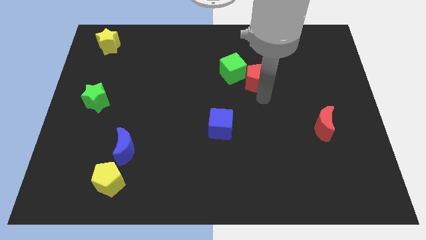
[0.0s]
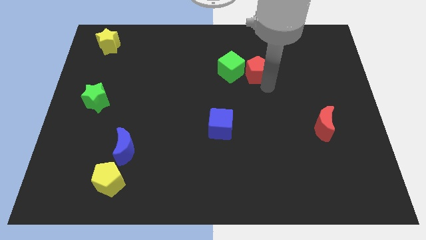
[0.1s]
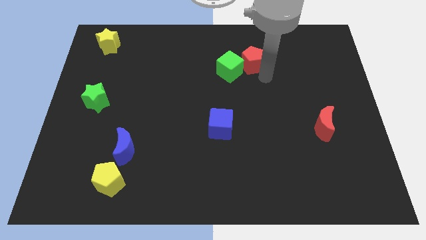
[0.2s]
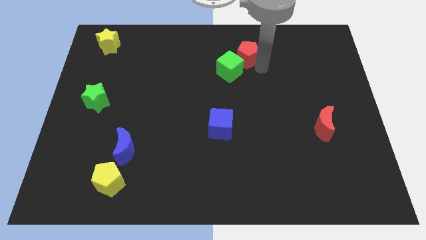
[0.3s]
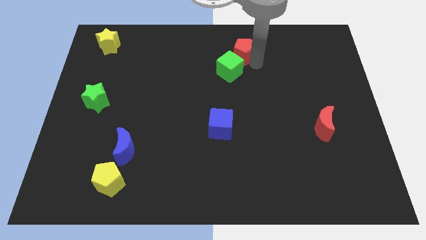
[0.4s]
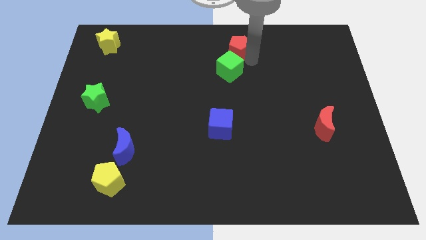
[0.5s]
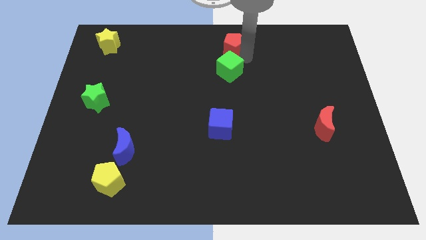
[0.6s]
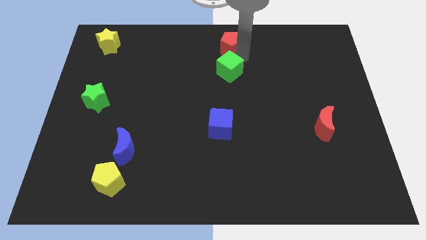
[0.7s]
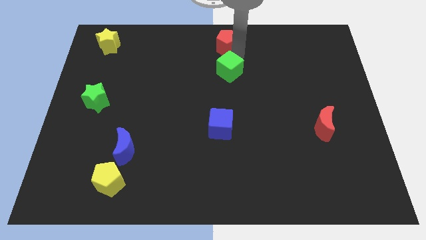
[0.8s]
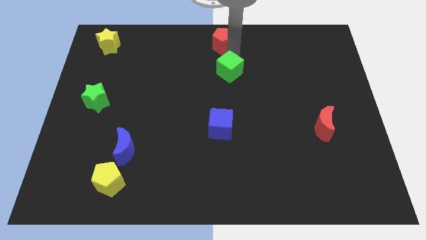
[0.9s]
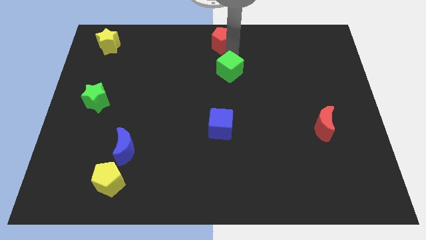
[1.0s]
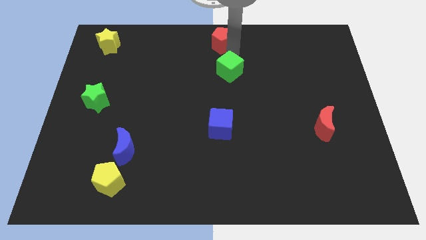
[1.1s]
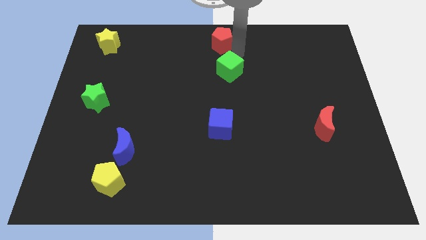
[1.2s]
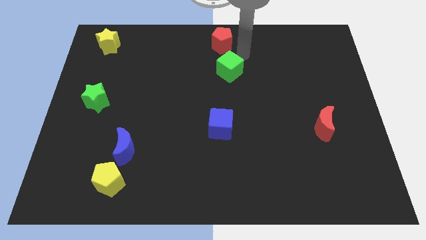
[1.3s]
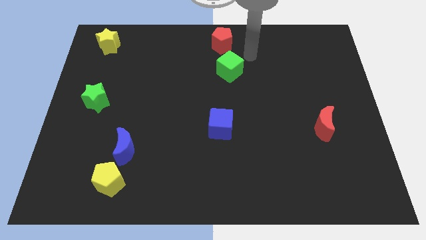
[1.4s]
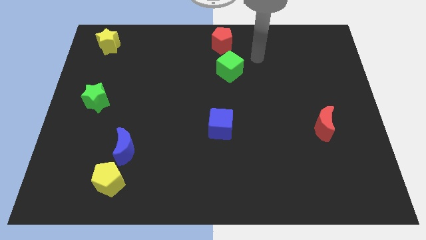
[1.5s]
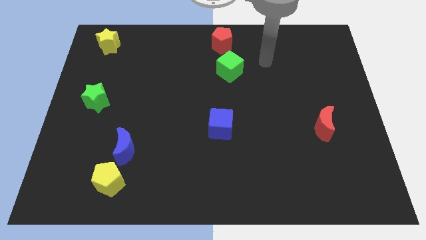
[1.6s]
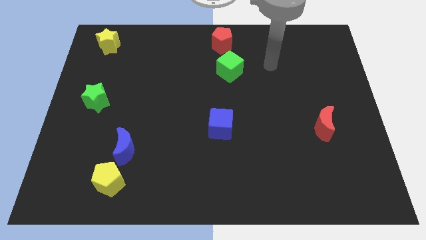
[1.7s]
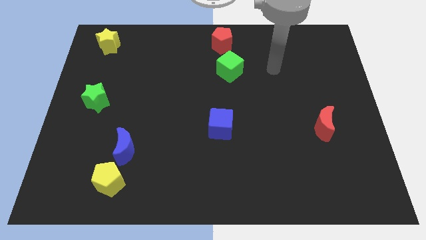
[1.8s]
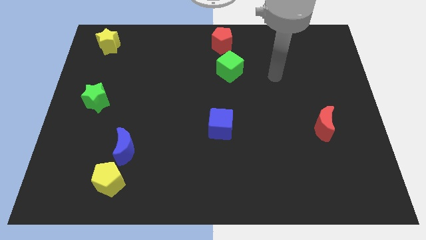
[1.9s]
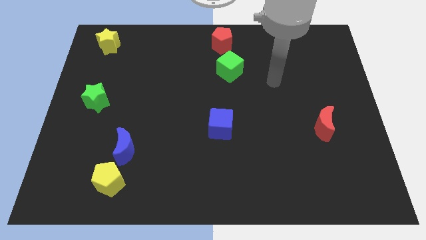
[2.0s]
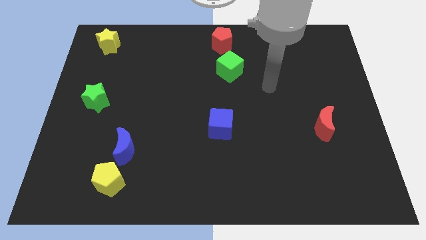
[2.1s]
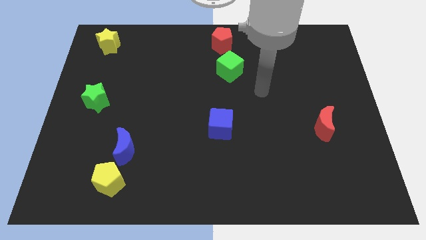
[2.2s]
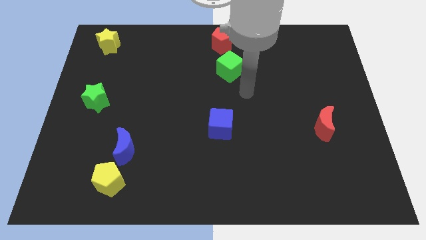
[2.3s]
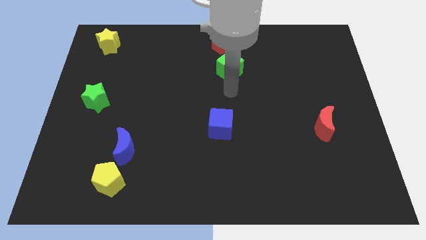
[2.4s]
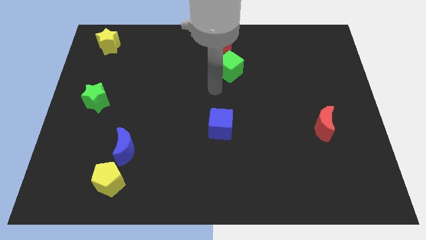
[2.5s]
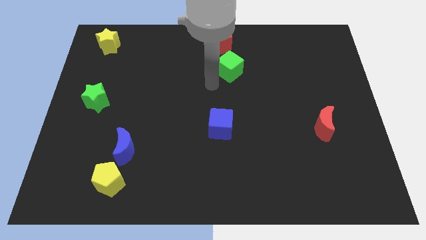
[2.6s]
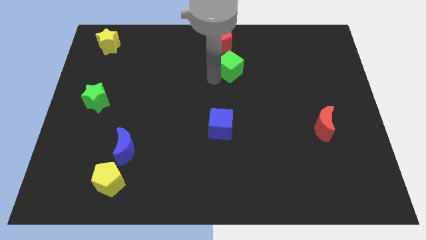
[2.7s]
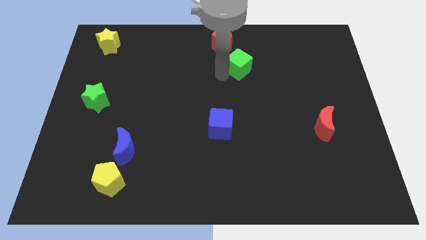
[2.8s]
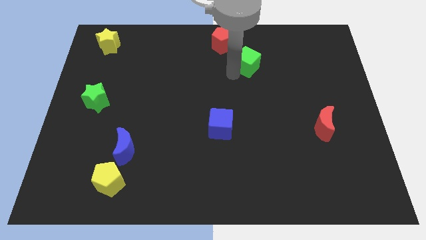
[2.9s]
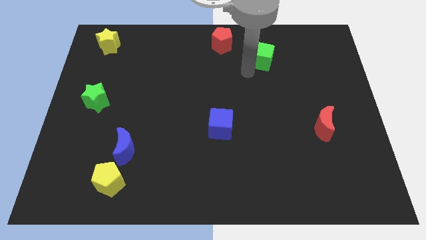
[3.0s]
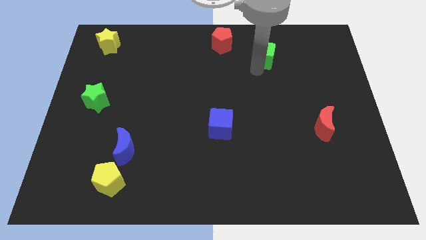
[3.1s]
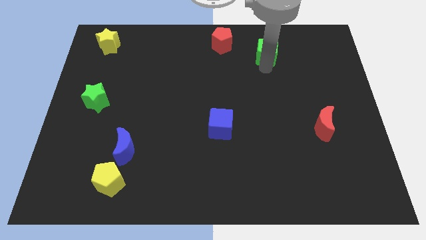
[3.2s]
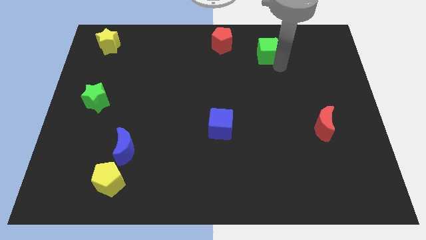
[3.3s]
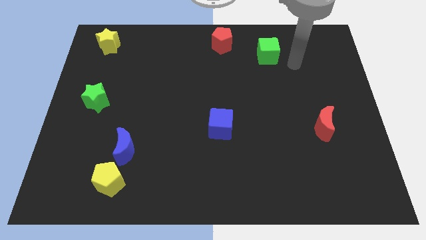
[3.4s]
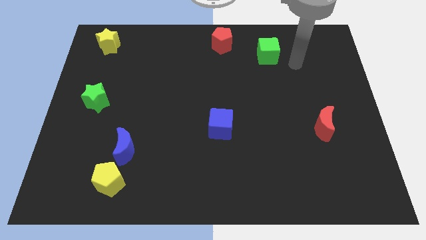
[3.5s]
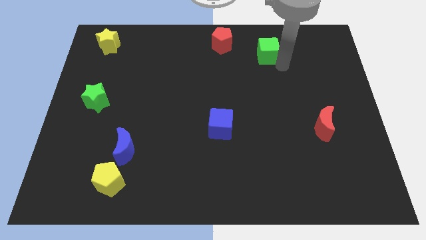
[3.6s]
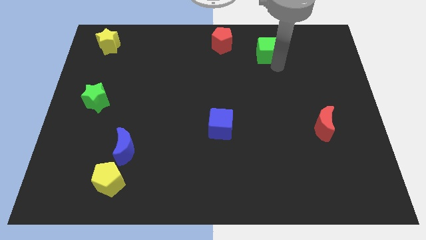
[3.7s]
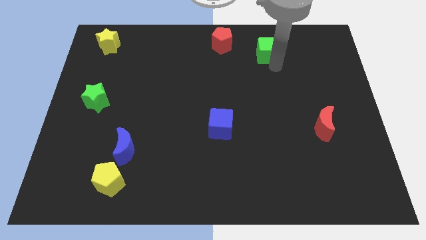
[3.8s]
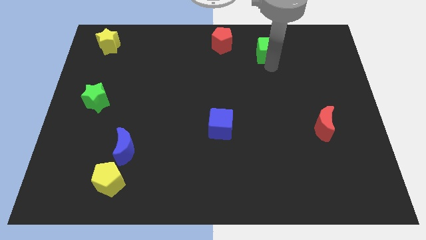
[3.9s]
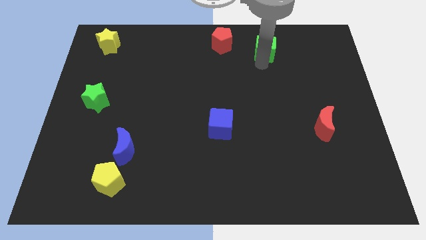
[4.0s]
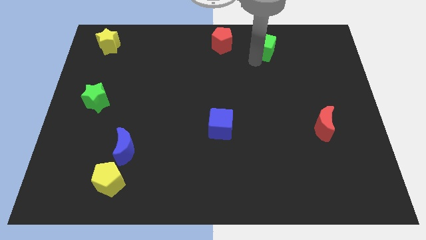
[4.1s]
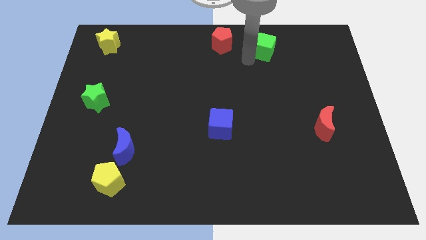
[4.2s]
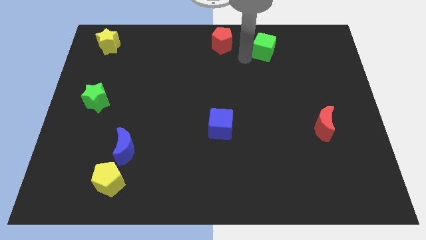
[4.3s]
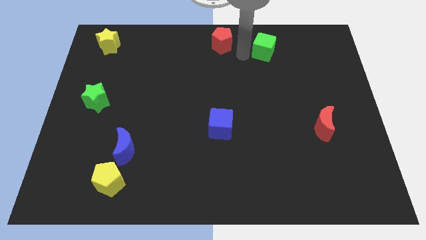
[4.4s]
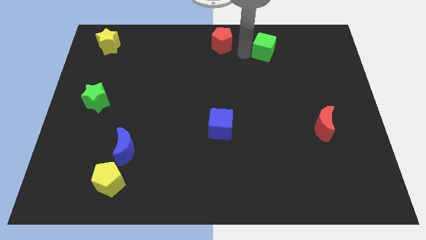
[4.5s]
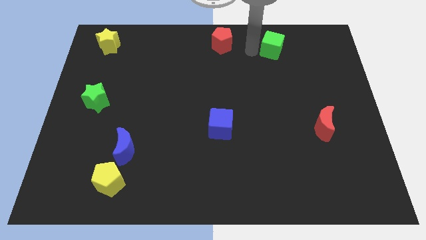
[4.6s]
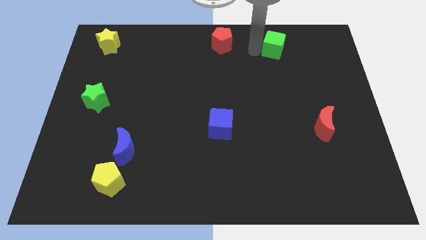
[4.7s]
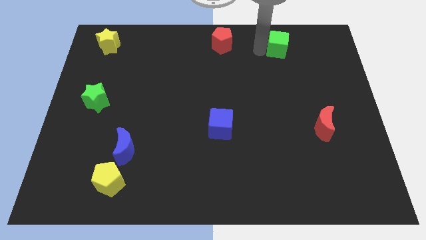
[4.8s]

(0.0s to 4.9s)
push the red pentagon and green cube towards the top side of the board

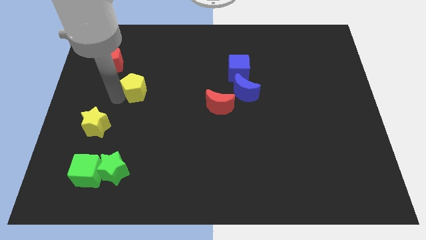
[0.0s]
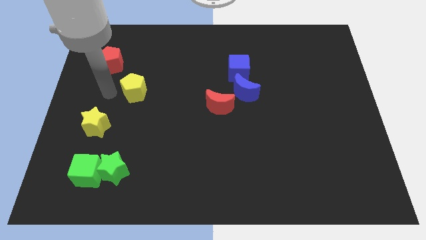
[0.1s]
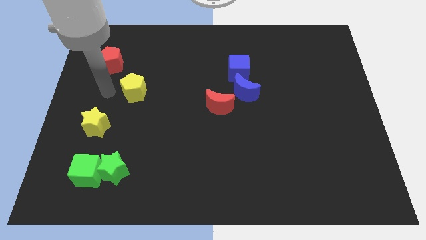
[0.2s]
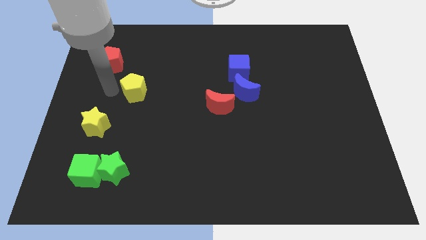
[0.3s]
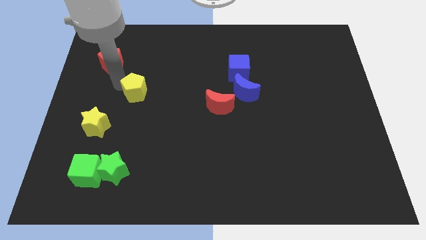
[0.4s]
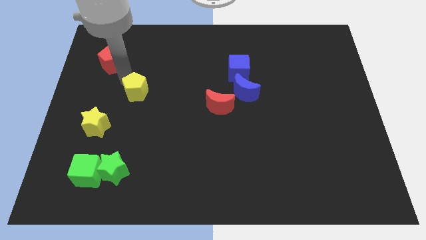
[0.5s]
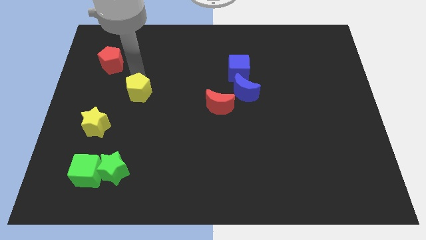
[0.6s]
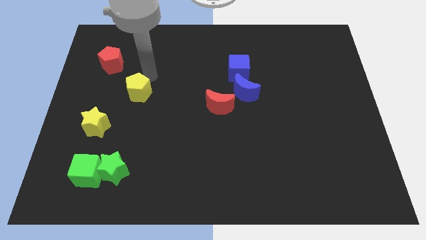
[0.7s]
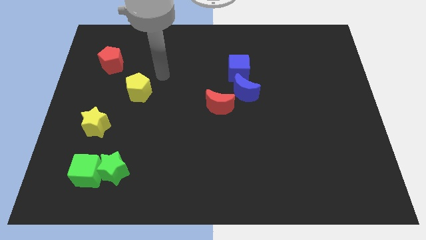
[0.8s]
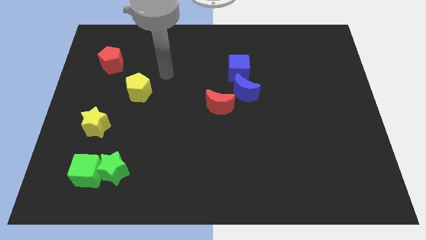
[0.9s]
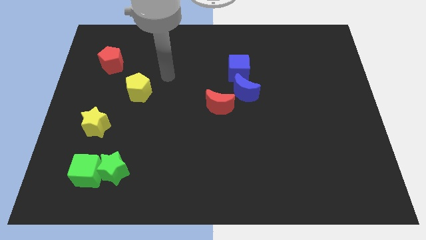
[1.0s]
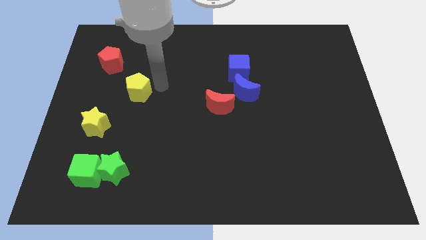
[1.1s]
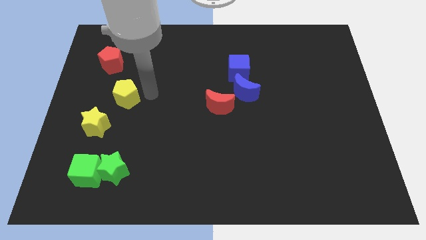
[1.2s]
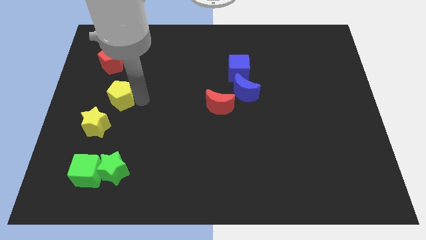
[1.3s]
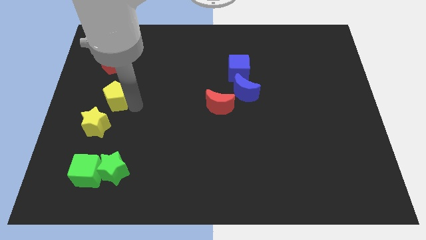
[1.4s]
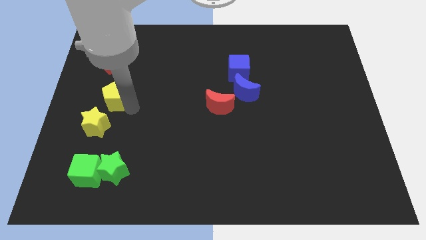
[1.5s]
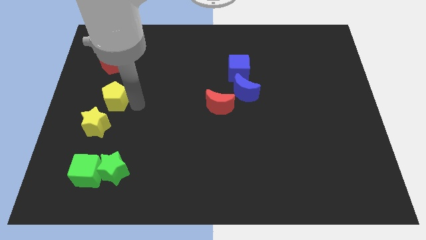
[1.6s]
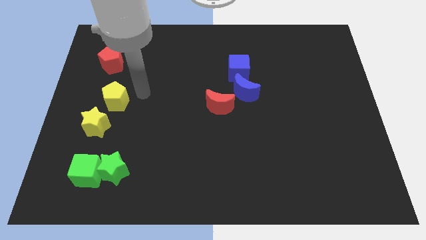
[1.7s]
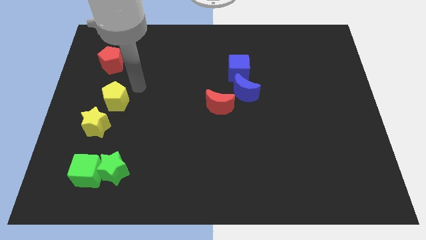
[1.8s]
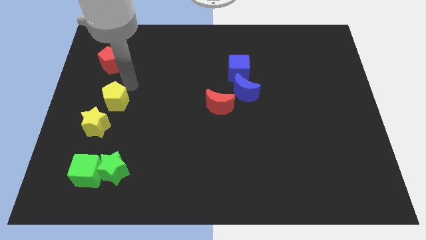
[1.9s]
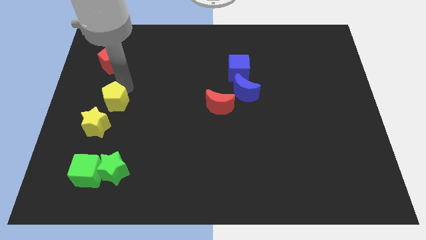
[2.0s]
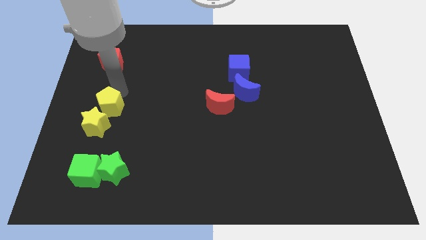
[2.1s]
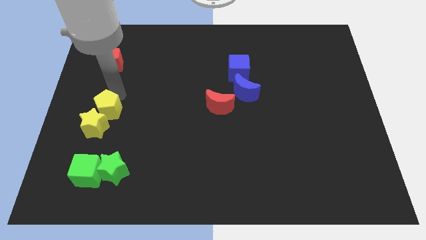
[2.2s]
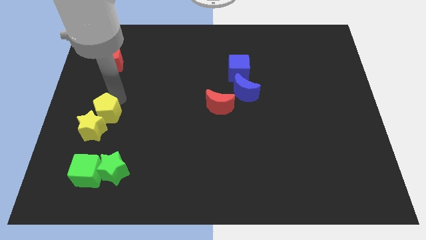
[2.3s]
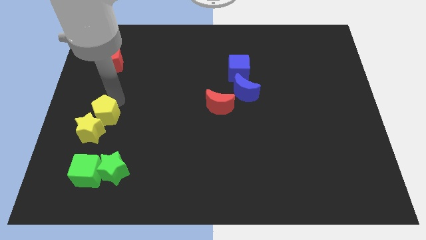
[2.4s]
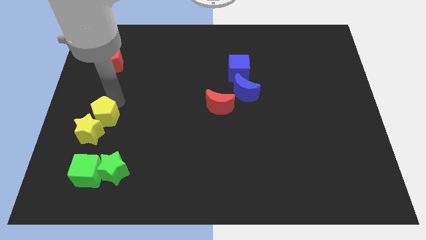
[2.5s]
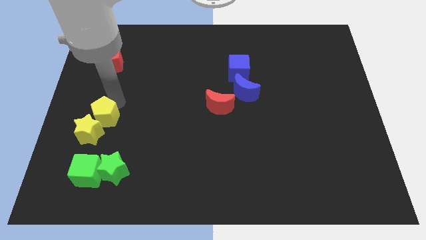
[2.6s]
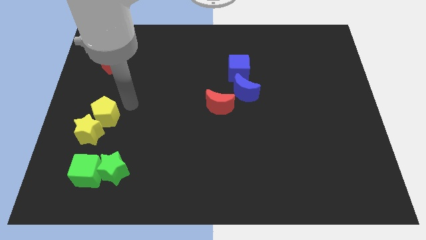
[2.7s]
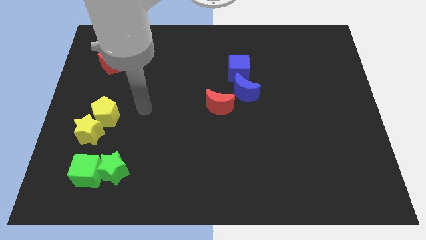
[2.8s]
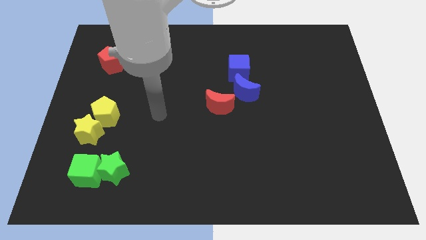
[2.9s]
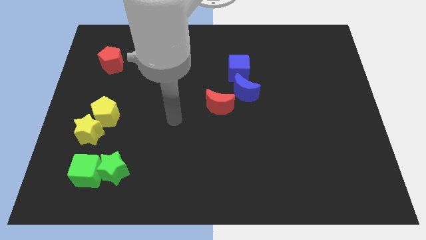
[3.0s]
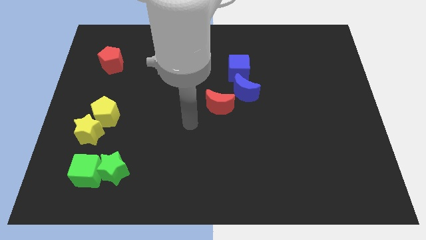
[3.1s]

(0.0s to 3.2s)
push yellow pentagon into yellow star

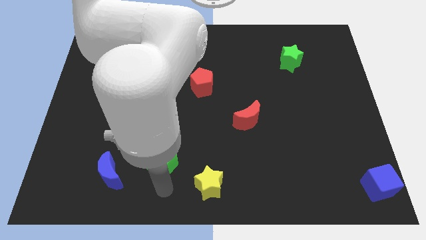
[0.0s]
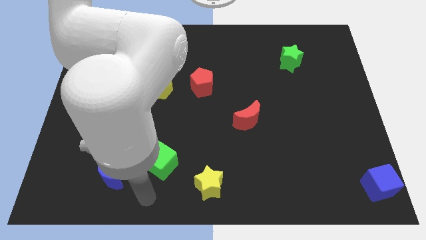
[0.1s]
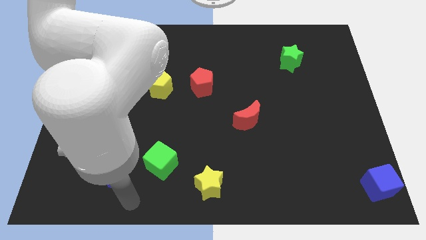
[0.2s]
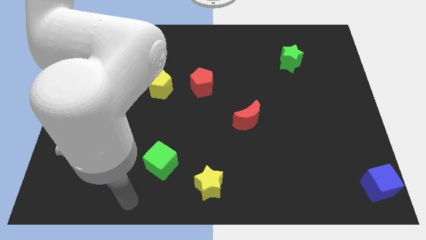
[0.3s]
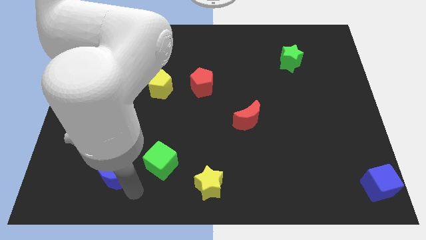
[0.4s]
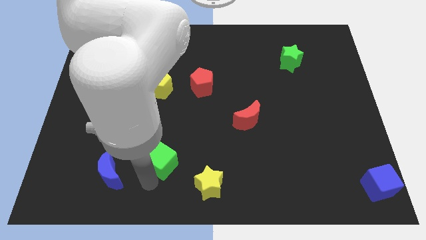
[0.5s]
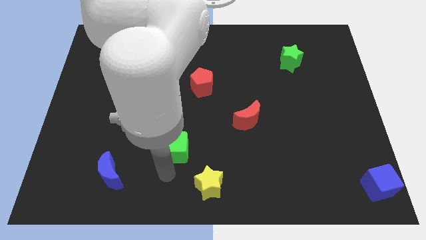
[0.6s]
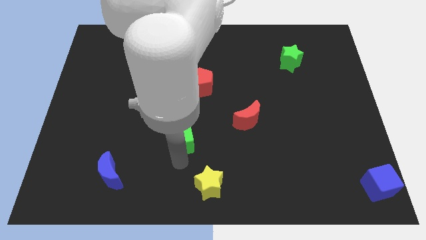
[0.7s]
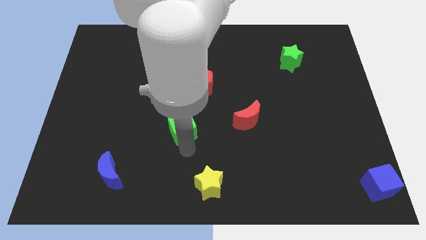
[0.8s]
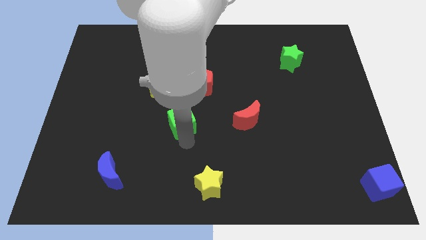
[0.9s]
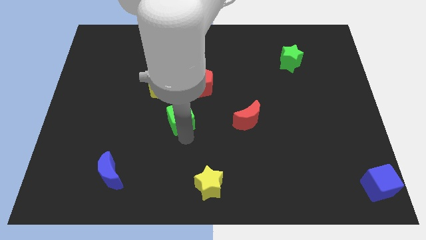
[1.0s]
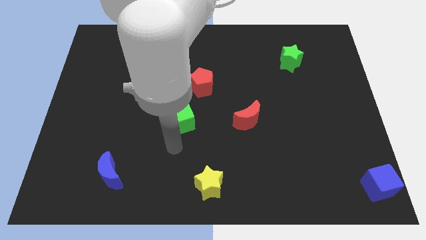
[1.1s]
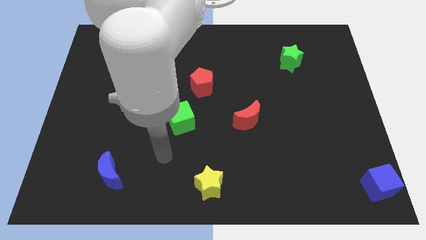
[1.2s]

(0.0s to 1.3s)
place the green cube horizontal to the red moon
